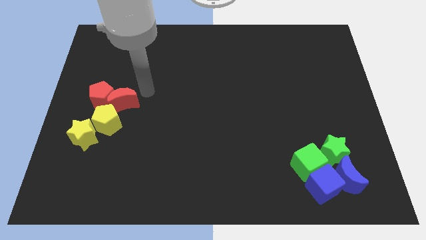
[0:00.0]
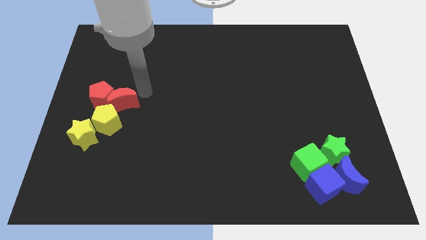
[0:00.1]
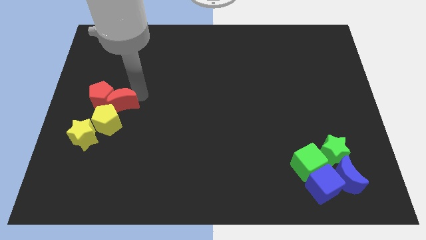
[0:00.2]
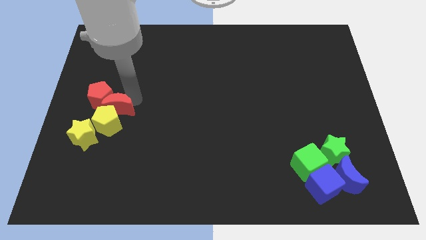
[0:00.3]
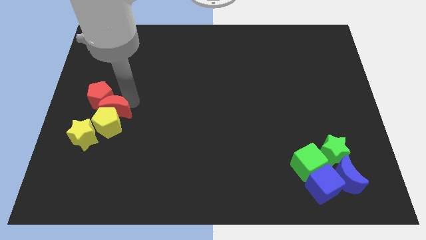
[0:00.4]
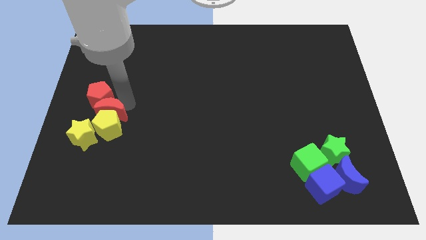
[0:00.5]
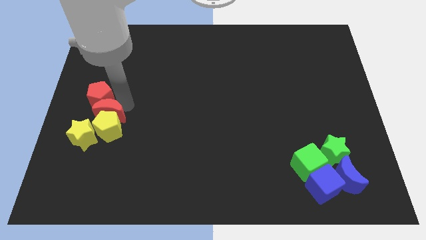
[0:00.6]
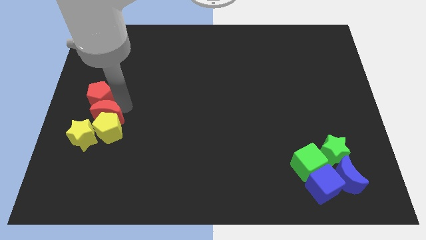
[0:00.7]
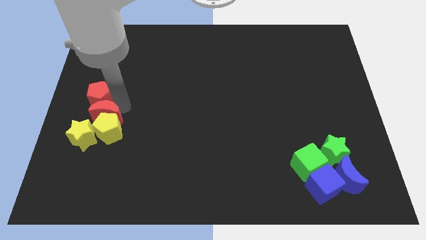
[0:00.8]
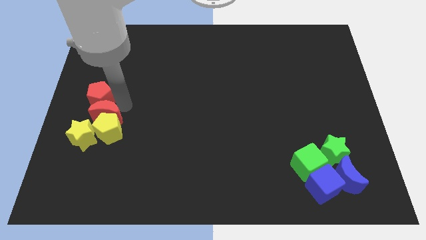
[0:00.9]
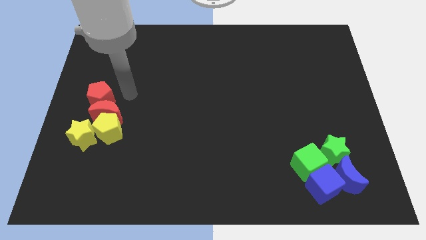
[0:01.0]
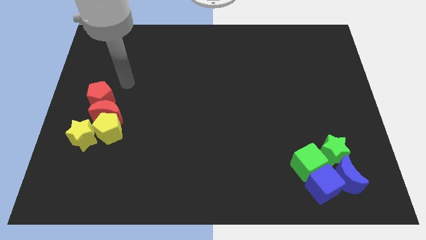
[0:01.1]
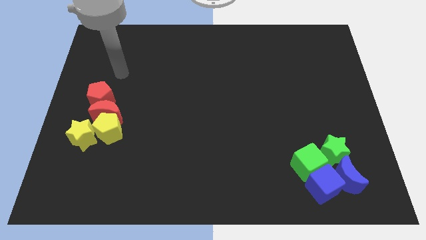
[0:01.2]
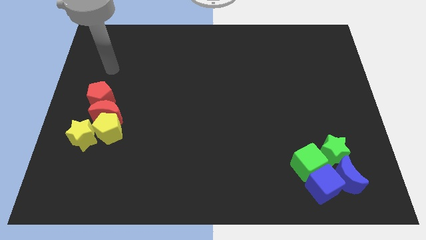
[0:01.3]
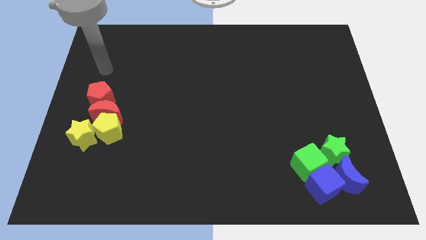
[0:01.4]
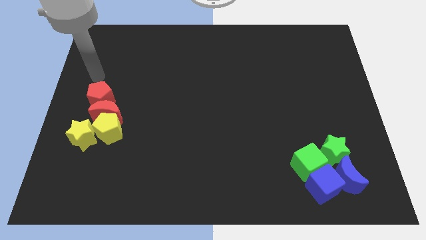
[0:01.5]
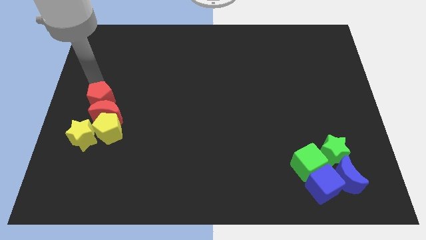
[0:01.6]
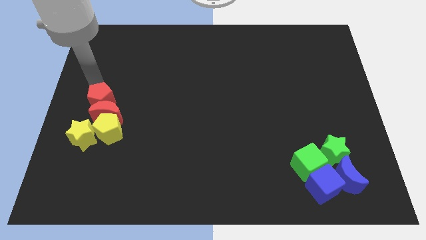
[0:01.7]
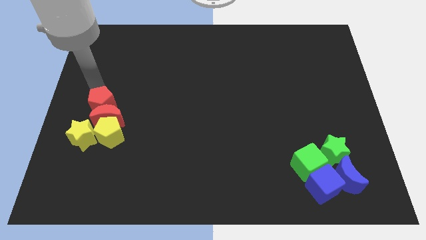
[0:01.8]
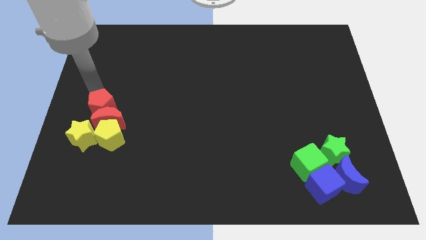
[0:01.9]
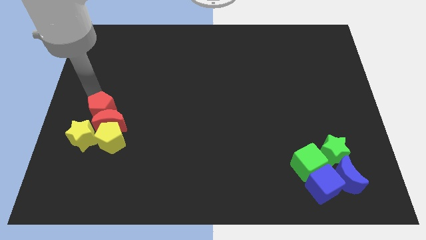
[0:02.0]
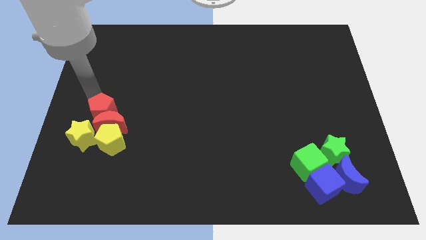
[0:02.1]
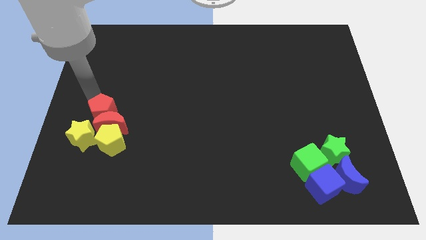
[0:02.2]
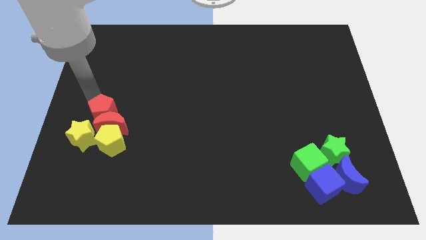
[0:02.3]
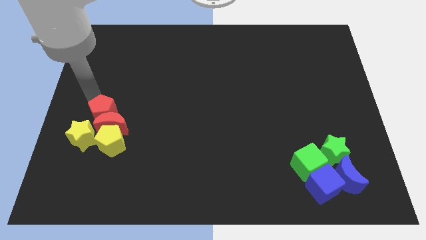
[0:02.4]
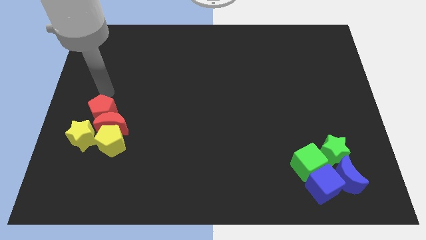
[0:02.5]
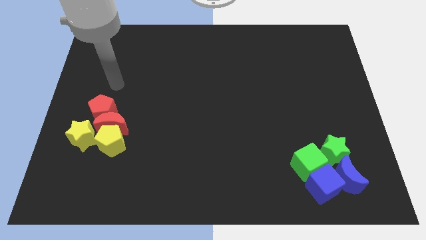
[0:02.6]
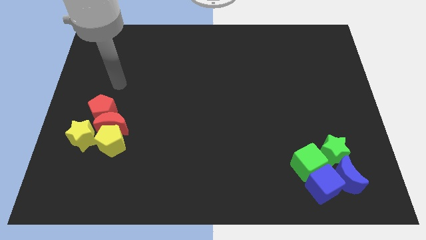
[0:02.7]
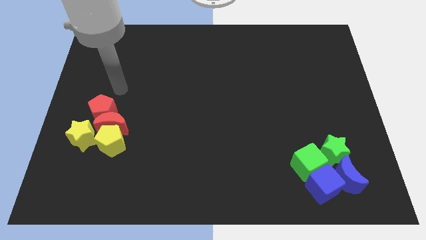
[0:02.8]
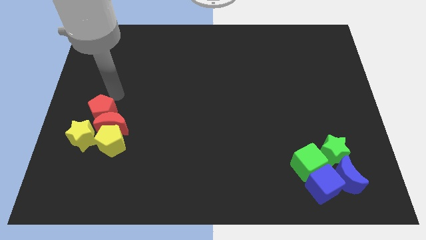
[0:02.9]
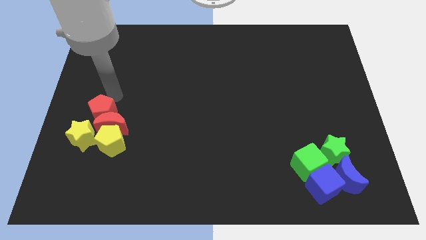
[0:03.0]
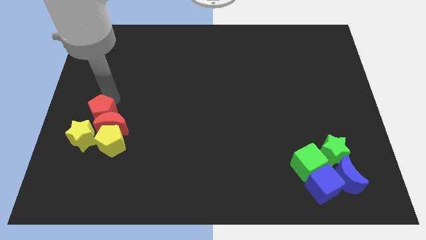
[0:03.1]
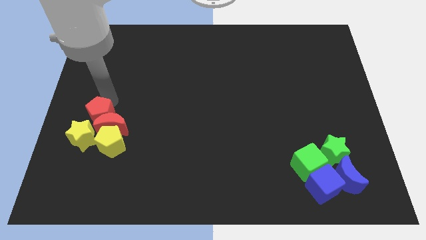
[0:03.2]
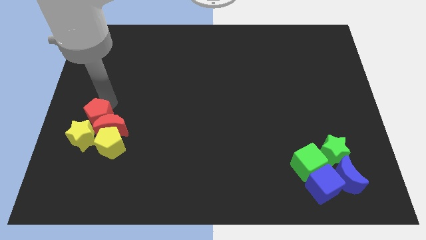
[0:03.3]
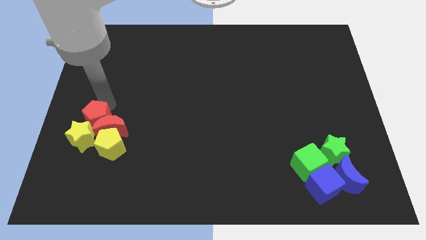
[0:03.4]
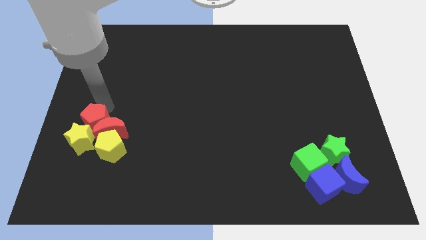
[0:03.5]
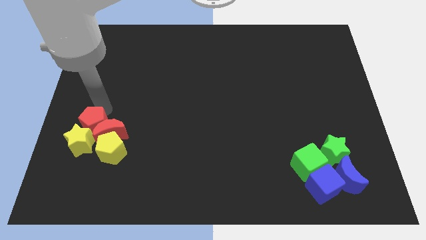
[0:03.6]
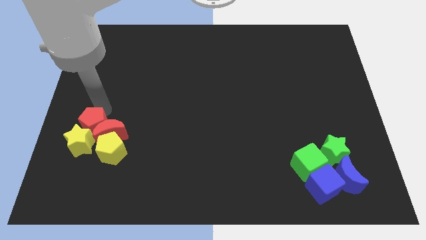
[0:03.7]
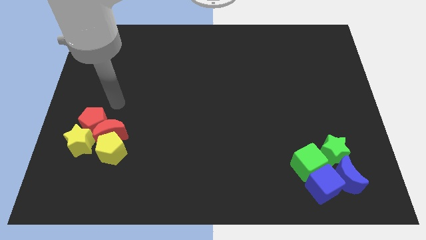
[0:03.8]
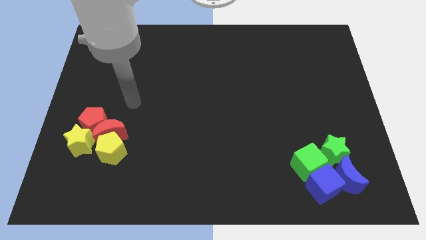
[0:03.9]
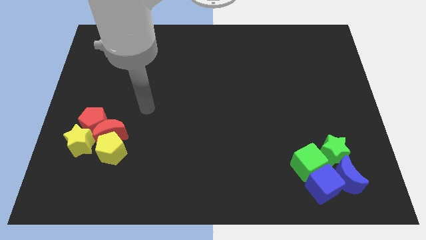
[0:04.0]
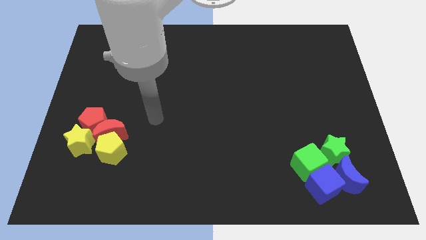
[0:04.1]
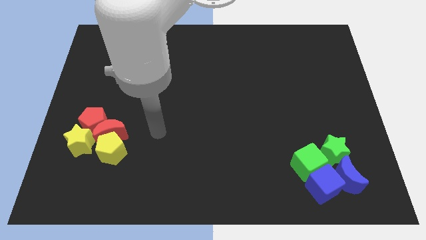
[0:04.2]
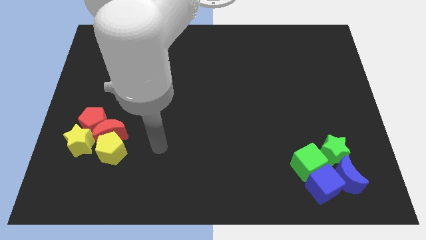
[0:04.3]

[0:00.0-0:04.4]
push the red blocks into the top side of the yellow blocks

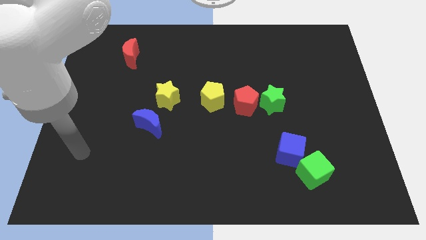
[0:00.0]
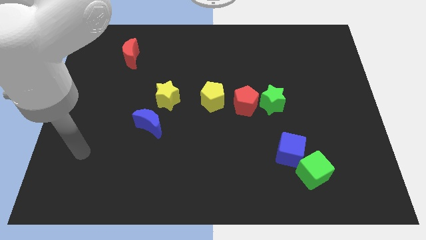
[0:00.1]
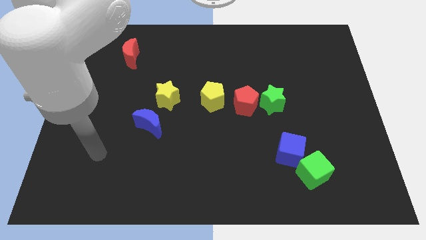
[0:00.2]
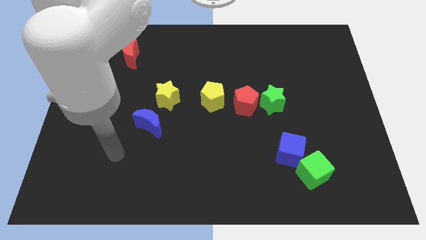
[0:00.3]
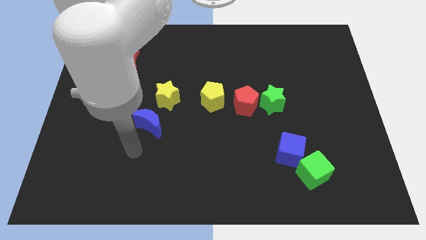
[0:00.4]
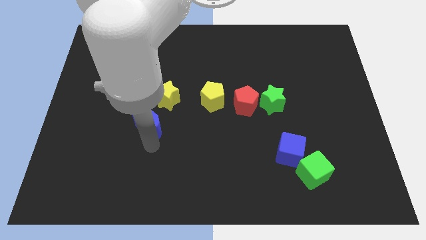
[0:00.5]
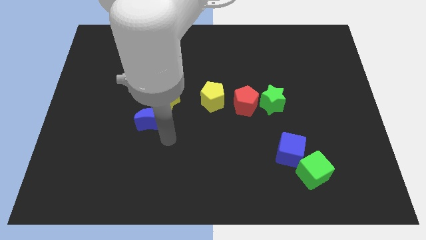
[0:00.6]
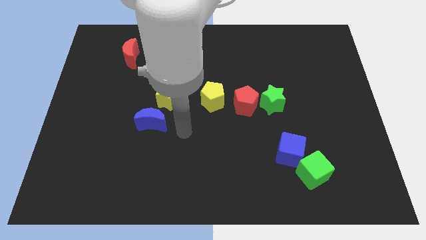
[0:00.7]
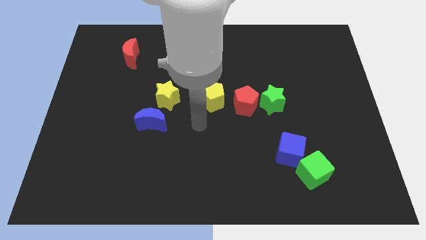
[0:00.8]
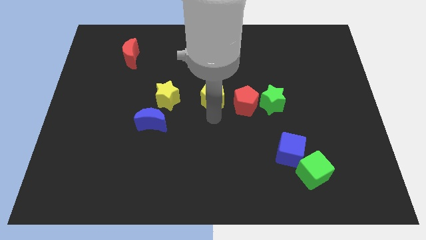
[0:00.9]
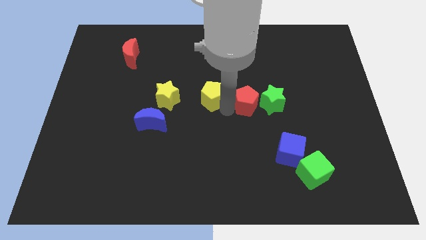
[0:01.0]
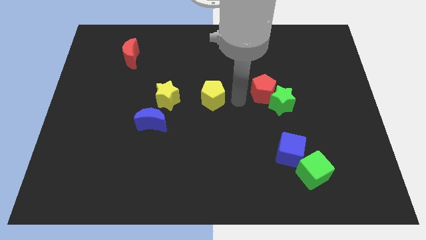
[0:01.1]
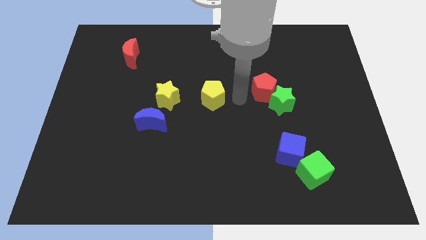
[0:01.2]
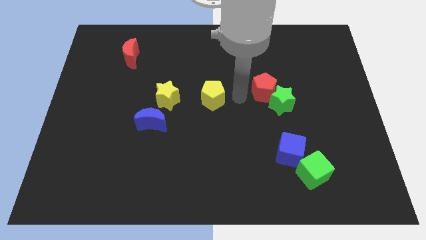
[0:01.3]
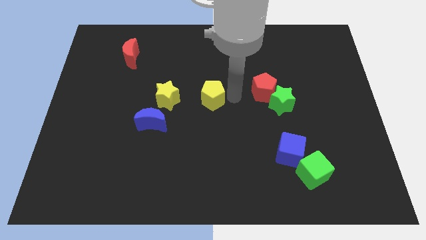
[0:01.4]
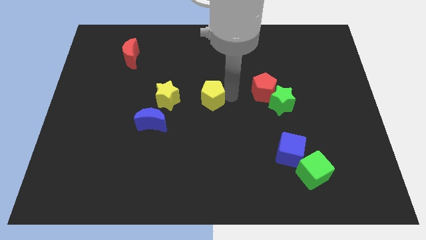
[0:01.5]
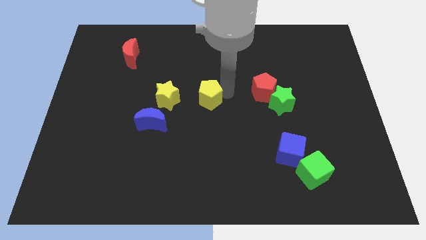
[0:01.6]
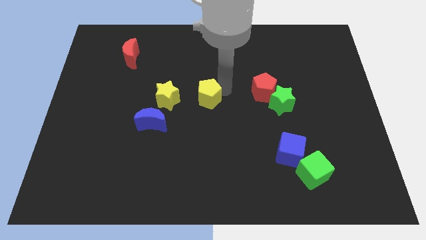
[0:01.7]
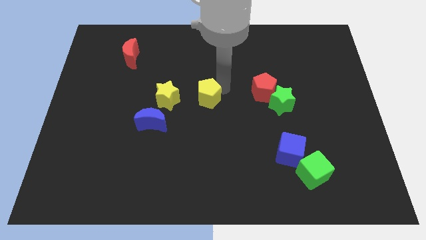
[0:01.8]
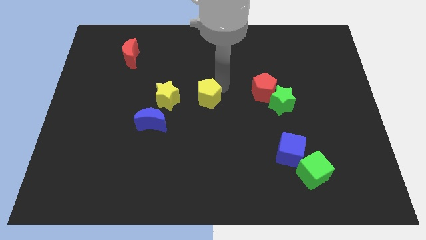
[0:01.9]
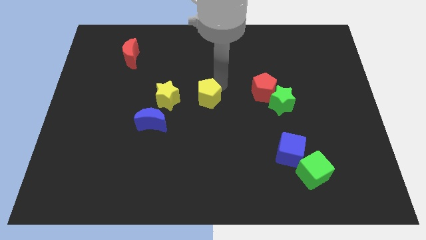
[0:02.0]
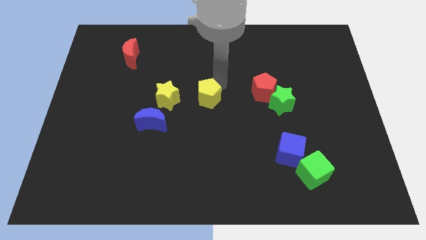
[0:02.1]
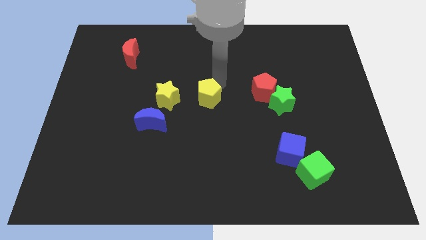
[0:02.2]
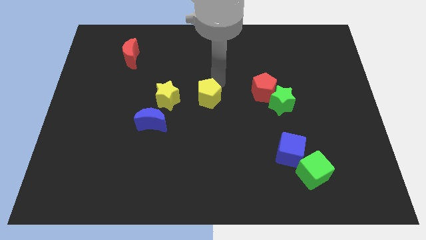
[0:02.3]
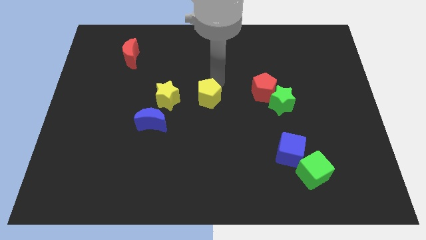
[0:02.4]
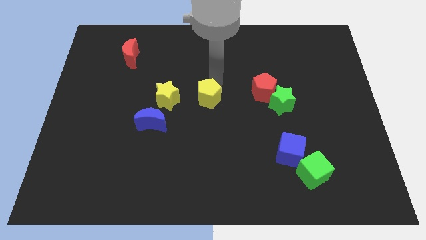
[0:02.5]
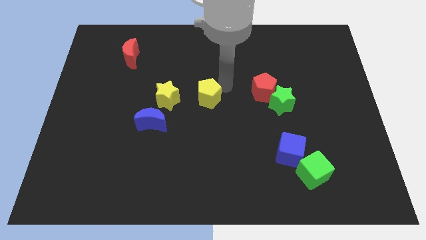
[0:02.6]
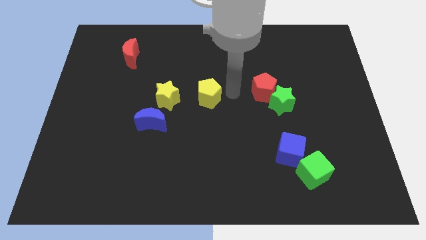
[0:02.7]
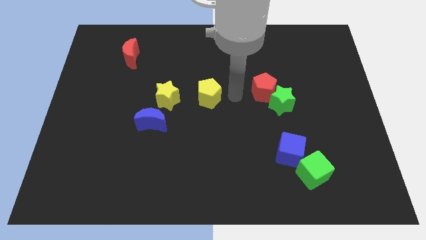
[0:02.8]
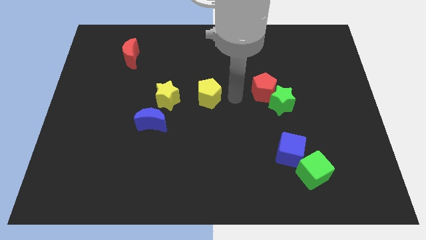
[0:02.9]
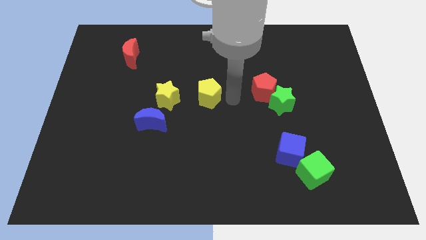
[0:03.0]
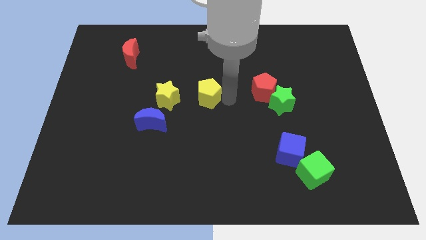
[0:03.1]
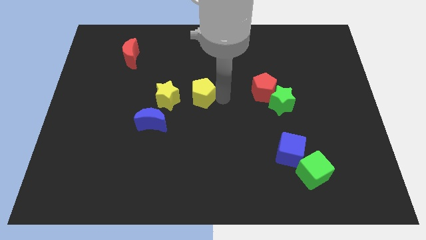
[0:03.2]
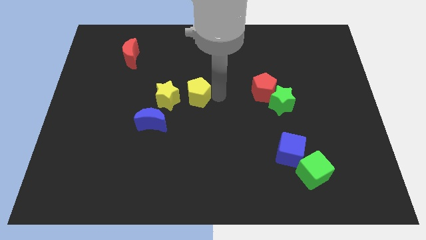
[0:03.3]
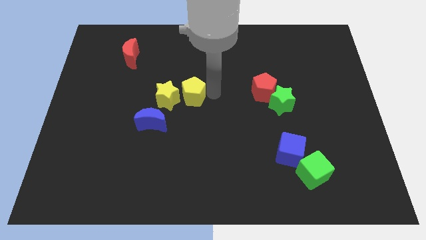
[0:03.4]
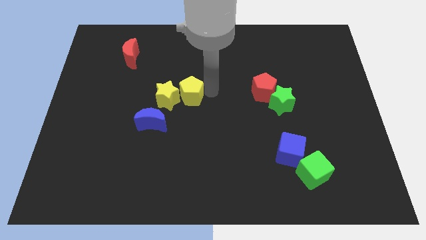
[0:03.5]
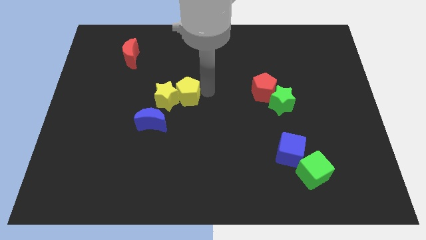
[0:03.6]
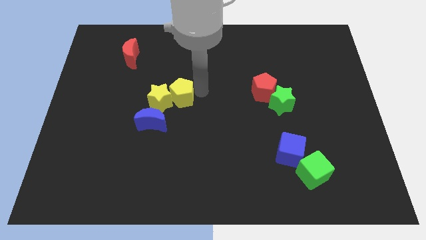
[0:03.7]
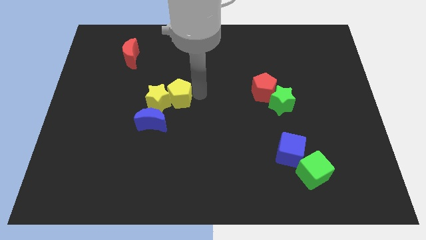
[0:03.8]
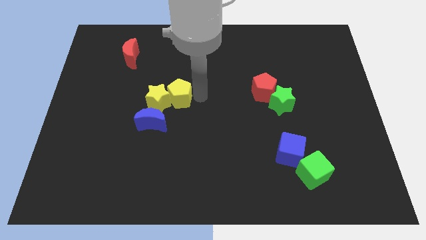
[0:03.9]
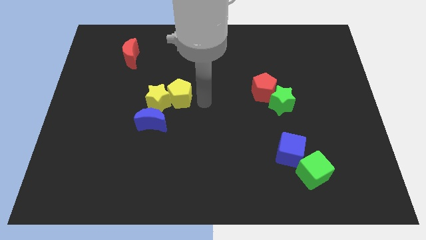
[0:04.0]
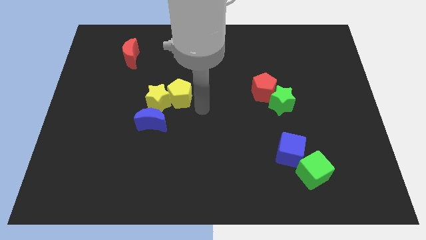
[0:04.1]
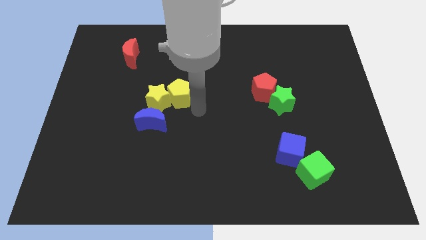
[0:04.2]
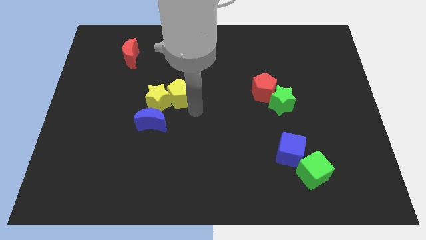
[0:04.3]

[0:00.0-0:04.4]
move the yellow pentagon slightly to the left side

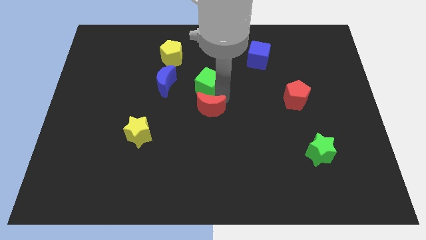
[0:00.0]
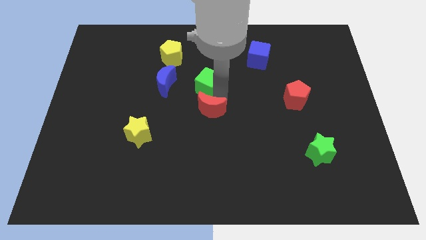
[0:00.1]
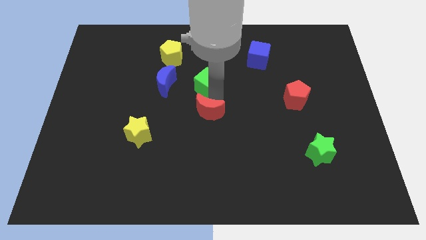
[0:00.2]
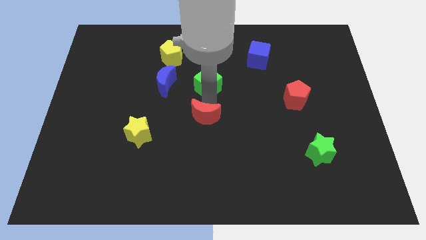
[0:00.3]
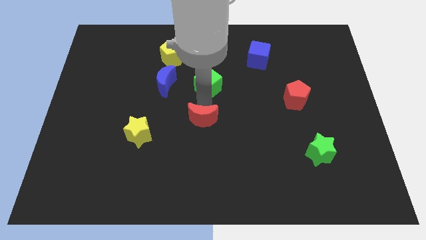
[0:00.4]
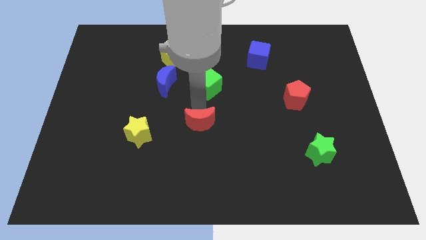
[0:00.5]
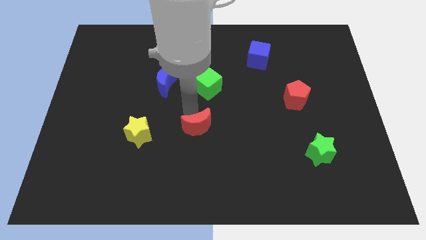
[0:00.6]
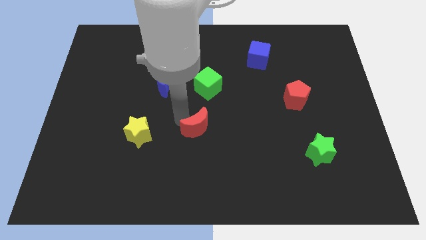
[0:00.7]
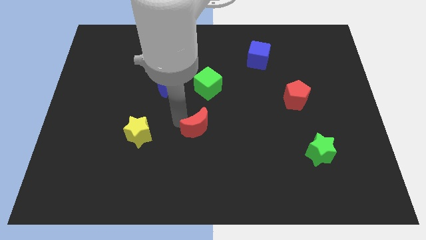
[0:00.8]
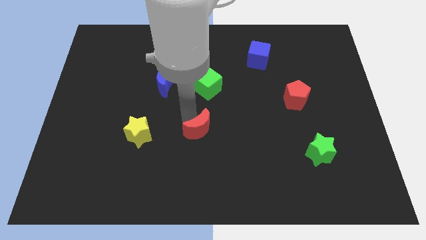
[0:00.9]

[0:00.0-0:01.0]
push red crescent downwards
